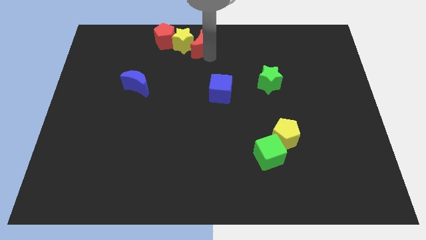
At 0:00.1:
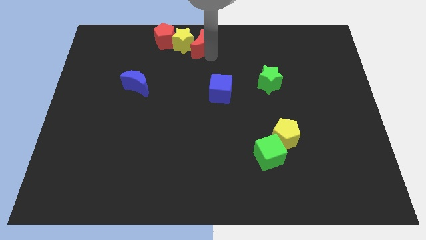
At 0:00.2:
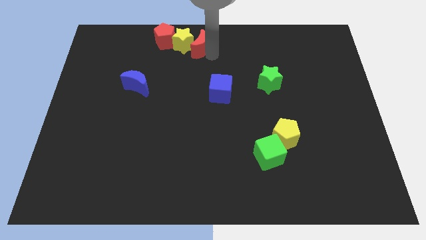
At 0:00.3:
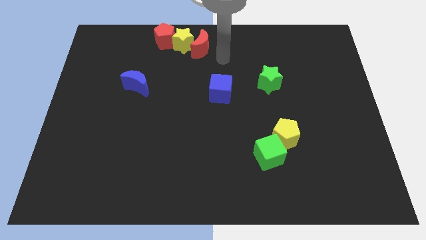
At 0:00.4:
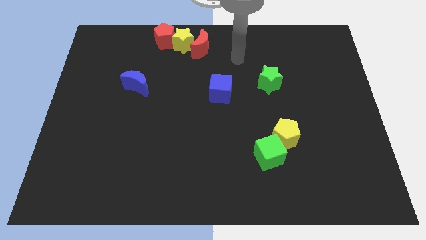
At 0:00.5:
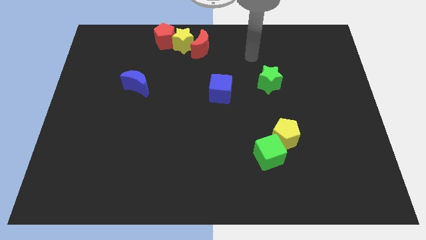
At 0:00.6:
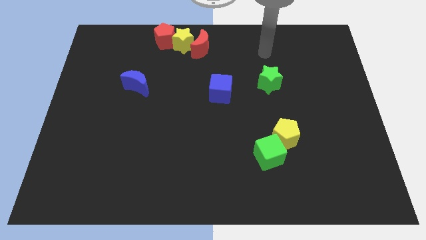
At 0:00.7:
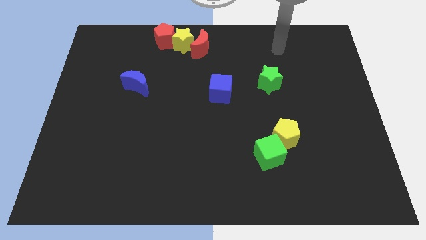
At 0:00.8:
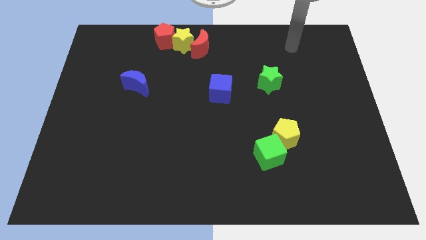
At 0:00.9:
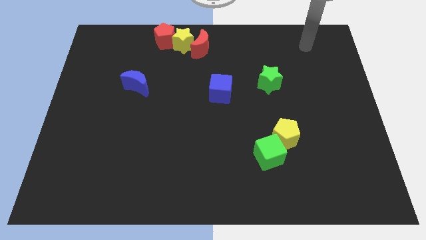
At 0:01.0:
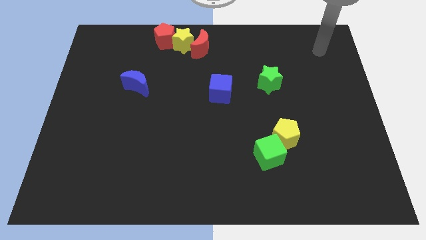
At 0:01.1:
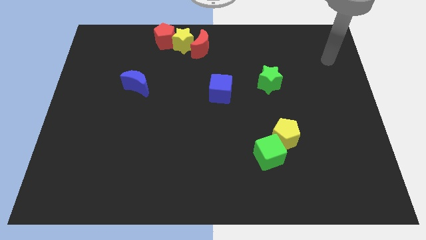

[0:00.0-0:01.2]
move your arm towards the top right to the board

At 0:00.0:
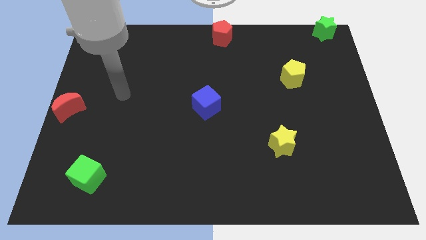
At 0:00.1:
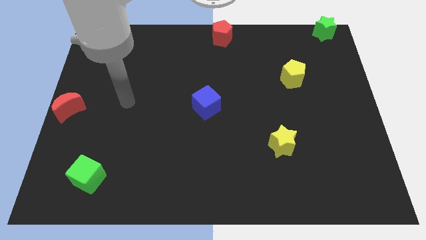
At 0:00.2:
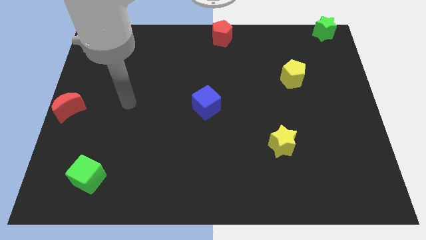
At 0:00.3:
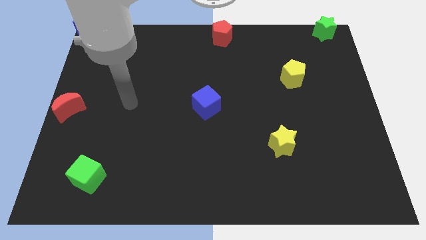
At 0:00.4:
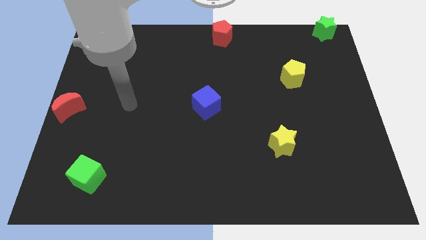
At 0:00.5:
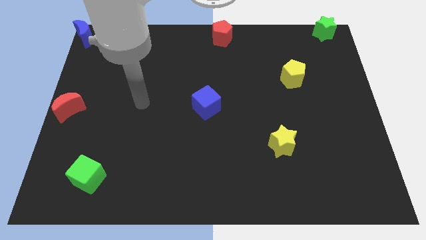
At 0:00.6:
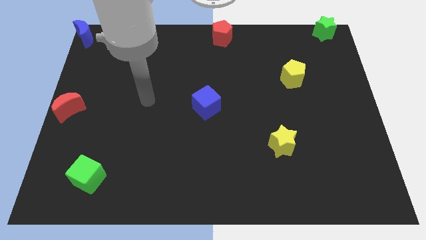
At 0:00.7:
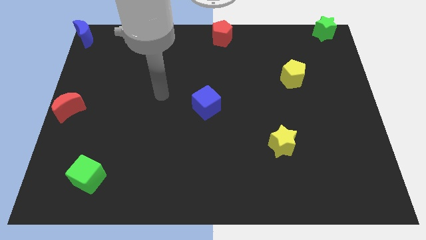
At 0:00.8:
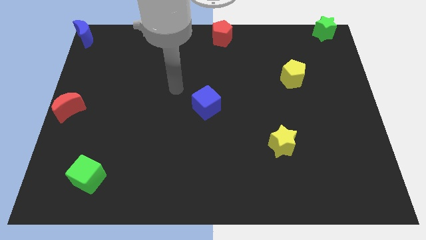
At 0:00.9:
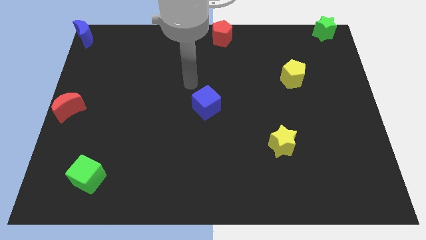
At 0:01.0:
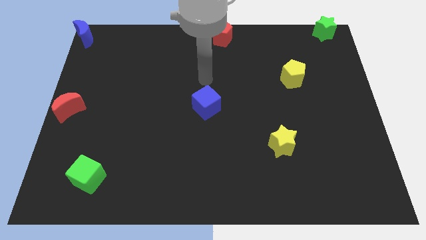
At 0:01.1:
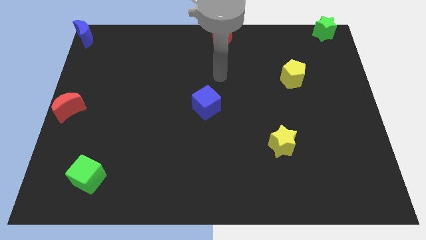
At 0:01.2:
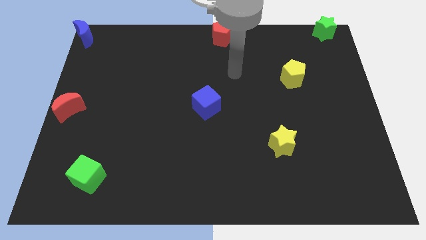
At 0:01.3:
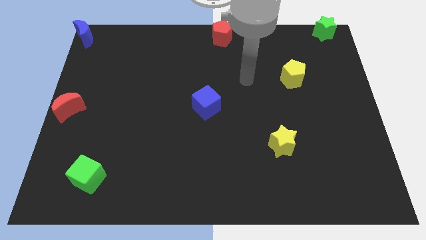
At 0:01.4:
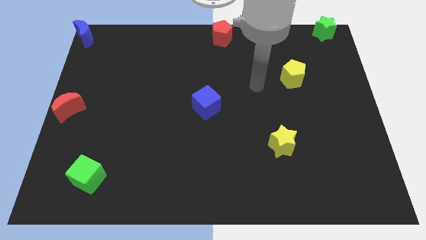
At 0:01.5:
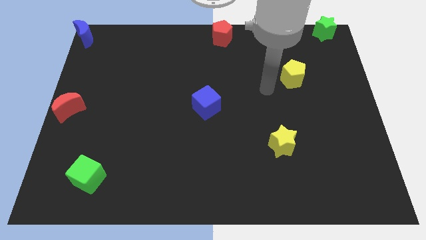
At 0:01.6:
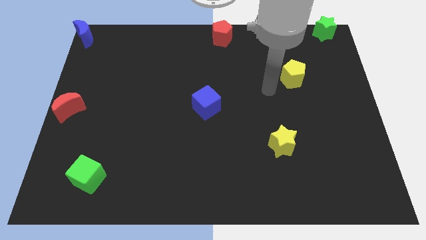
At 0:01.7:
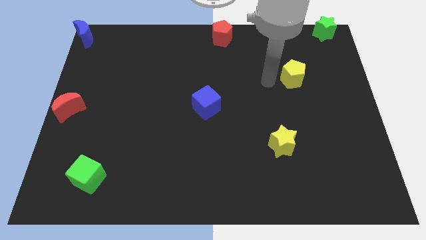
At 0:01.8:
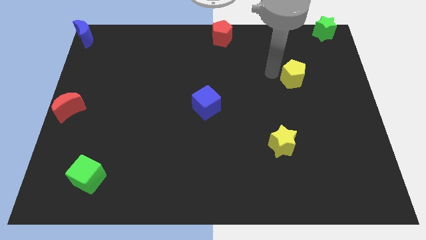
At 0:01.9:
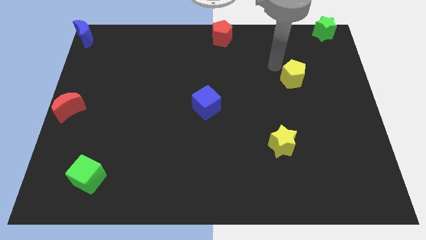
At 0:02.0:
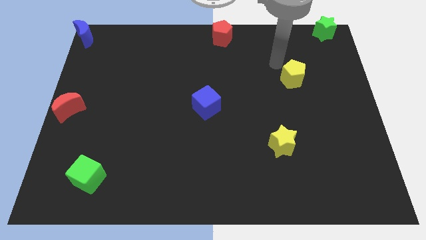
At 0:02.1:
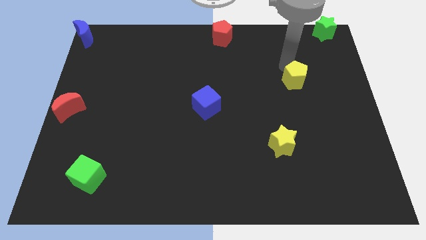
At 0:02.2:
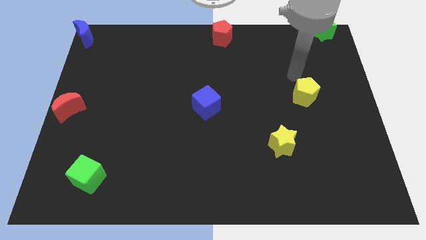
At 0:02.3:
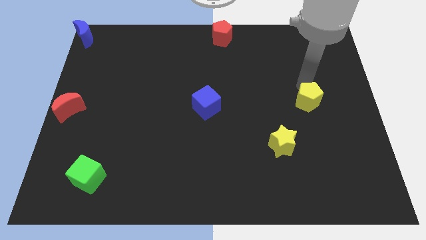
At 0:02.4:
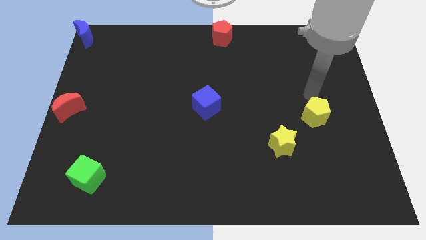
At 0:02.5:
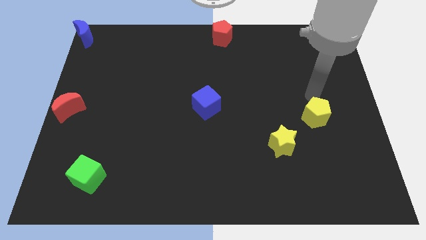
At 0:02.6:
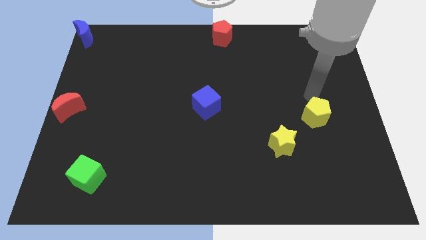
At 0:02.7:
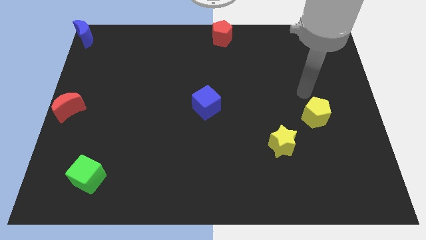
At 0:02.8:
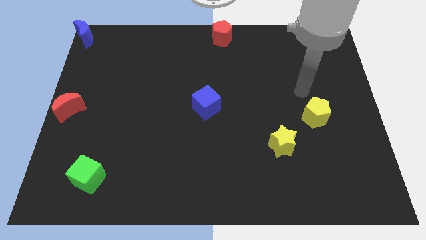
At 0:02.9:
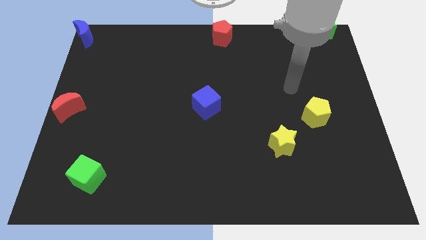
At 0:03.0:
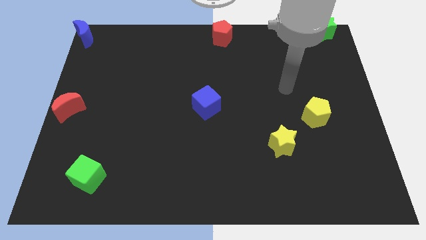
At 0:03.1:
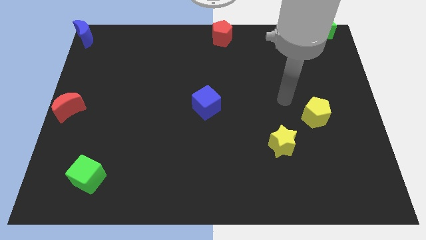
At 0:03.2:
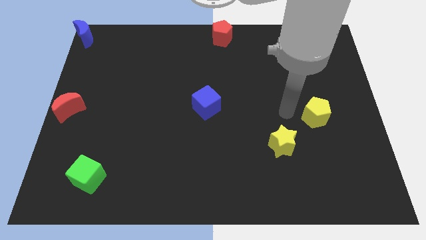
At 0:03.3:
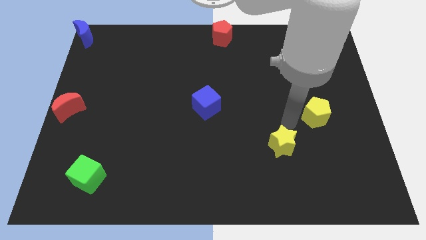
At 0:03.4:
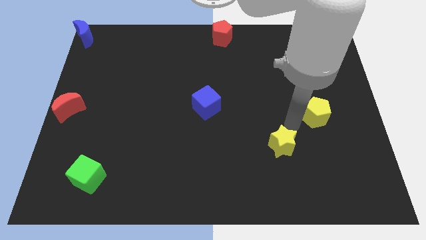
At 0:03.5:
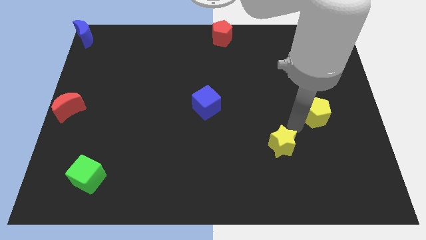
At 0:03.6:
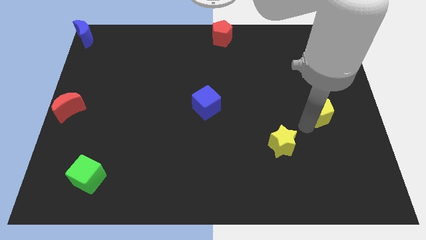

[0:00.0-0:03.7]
move yellow pentagon to the right center of the board

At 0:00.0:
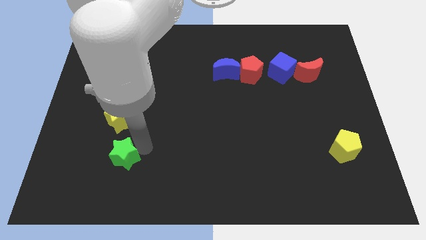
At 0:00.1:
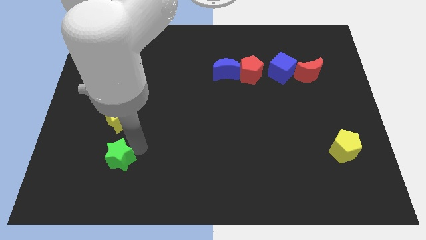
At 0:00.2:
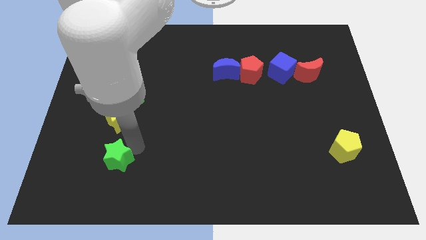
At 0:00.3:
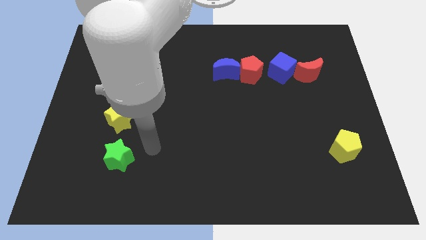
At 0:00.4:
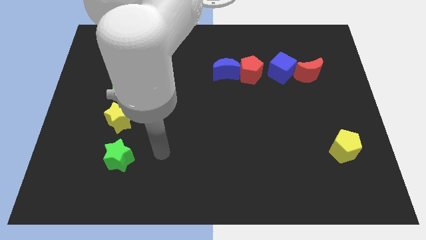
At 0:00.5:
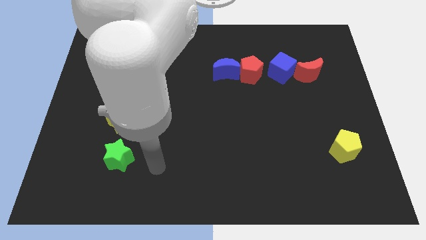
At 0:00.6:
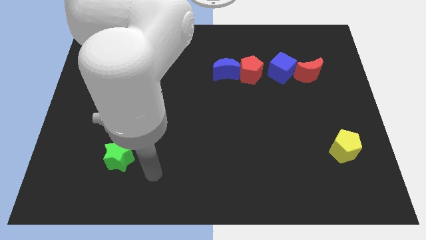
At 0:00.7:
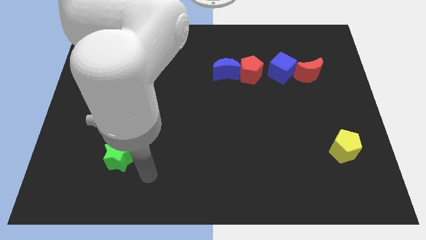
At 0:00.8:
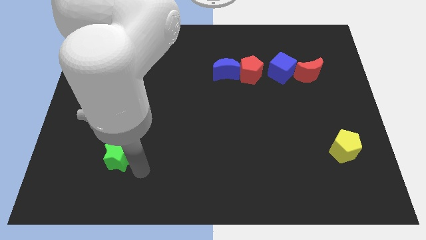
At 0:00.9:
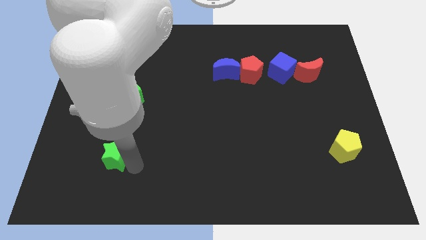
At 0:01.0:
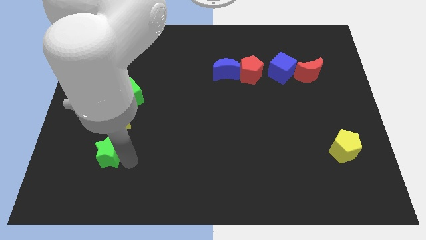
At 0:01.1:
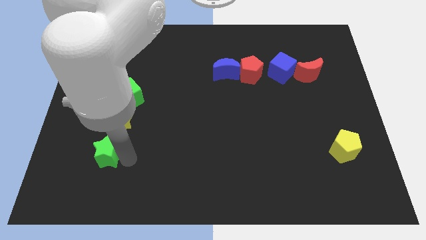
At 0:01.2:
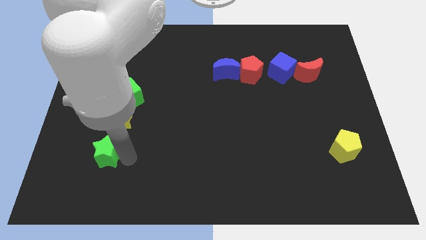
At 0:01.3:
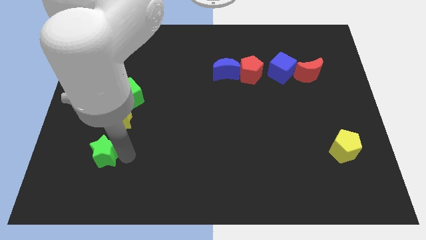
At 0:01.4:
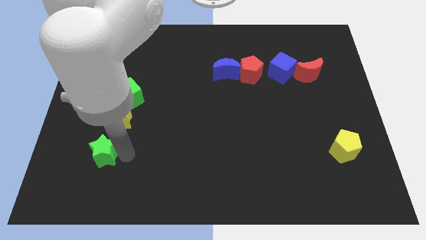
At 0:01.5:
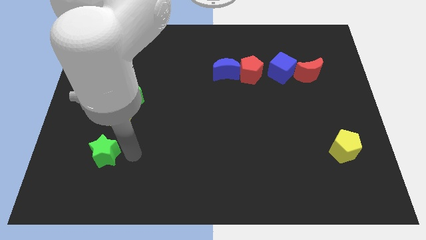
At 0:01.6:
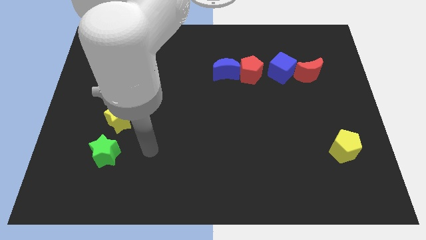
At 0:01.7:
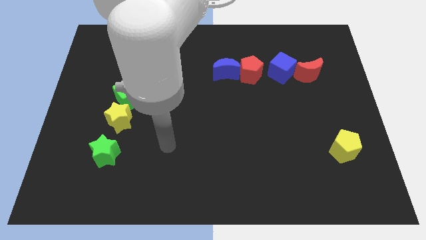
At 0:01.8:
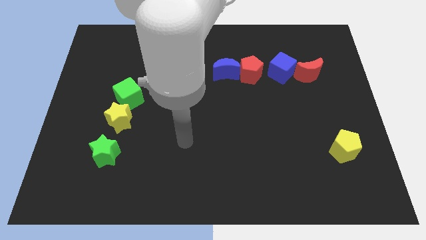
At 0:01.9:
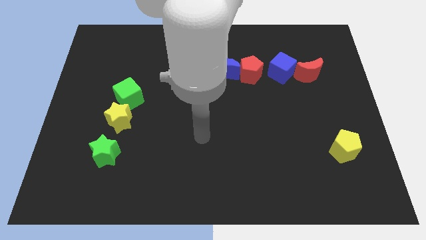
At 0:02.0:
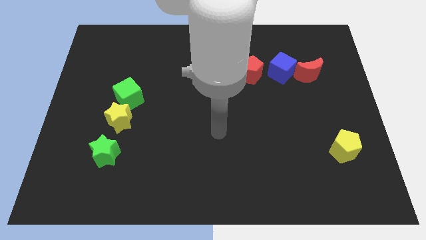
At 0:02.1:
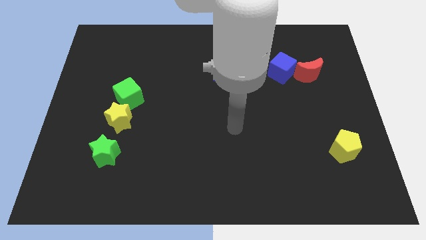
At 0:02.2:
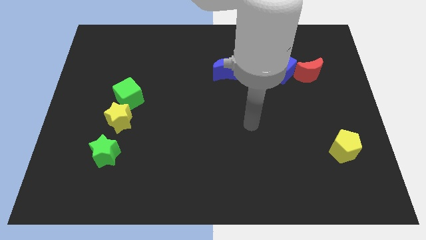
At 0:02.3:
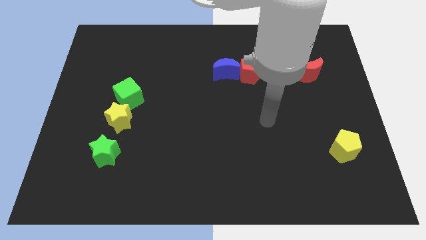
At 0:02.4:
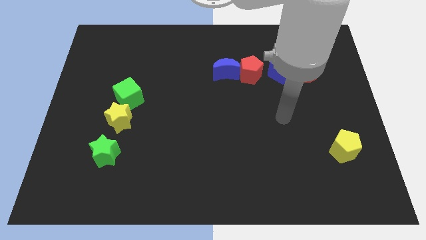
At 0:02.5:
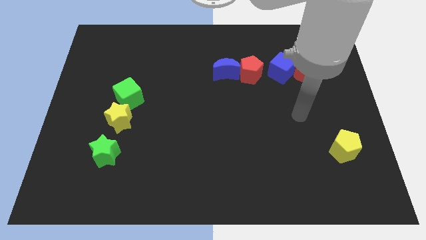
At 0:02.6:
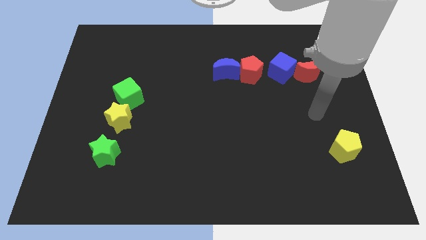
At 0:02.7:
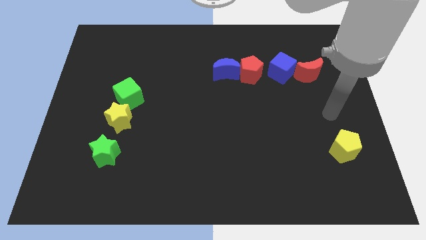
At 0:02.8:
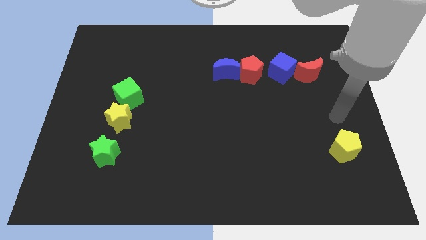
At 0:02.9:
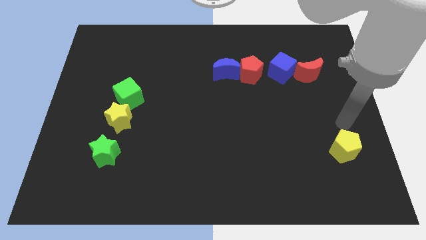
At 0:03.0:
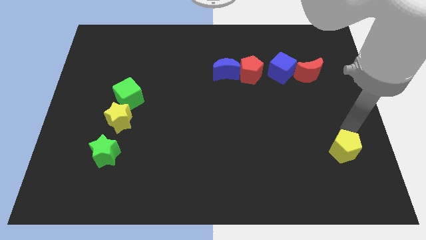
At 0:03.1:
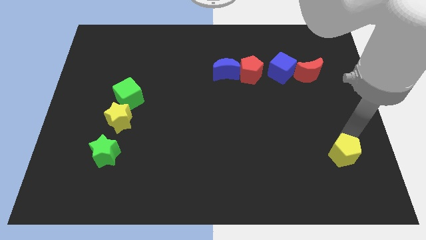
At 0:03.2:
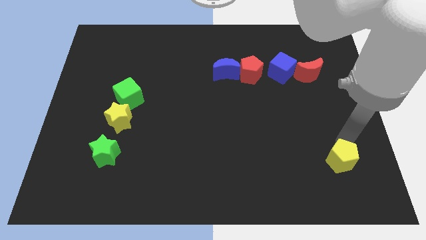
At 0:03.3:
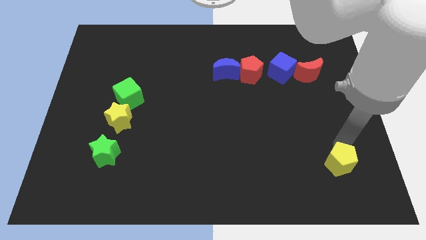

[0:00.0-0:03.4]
push your arm away from the green star

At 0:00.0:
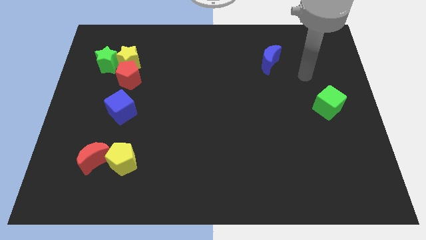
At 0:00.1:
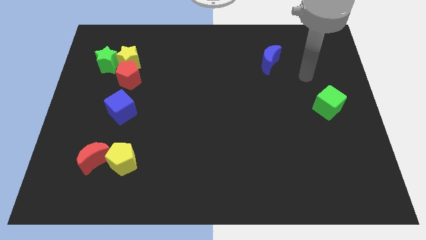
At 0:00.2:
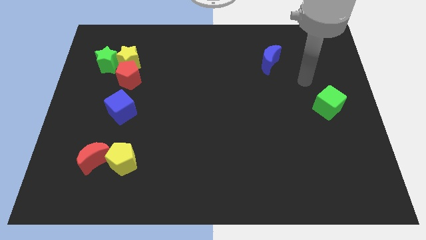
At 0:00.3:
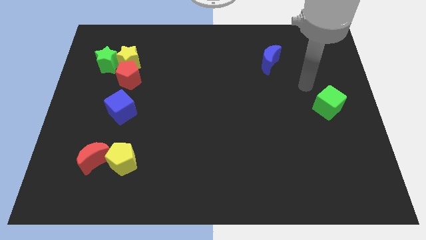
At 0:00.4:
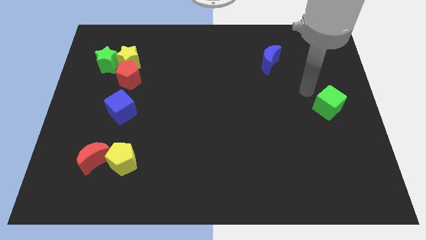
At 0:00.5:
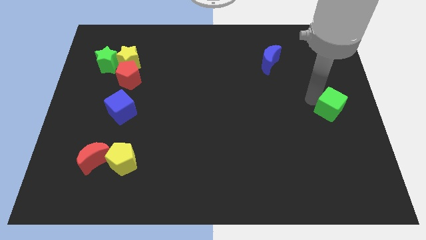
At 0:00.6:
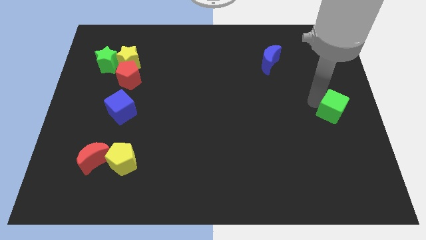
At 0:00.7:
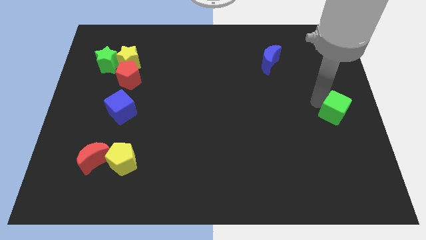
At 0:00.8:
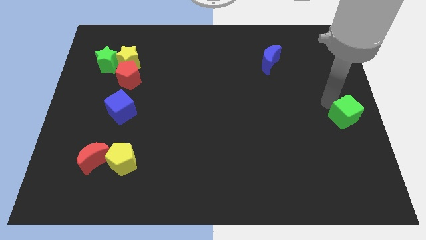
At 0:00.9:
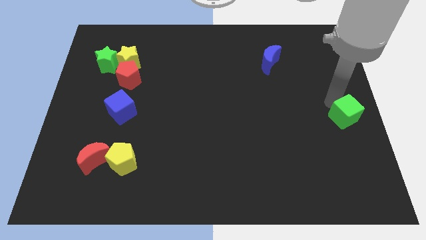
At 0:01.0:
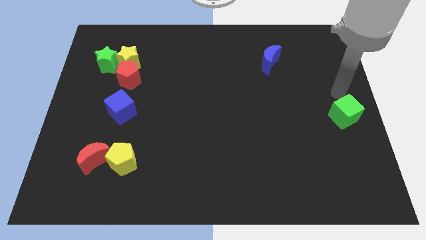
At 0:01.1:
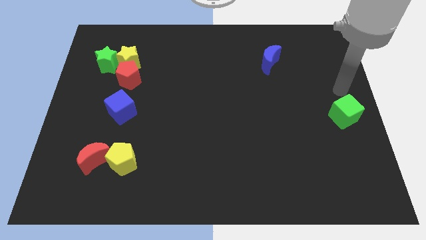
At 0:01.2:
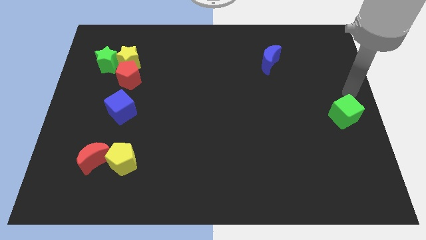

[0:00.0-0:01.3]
push the green cube slightly to the bottom
